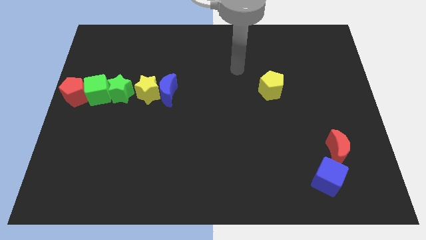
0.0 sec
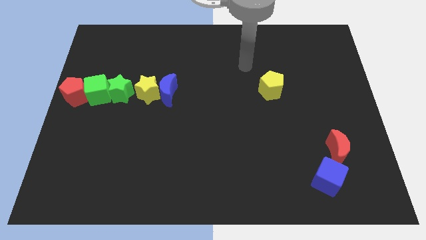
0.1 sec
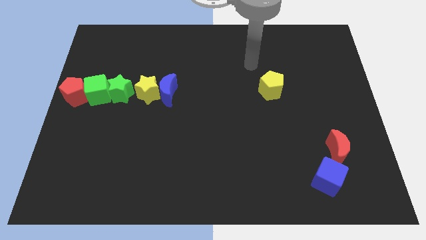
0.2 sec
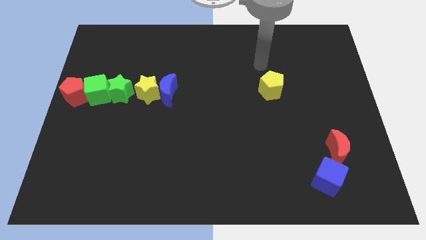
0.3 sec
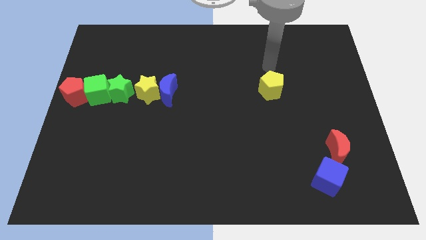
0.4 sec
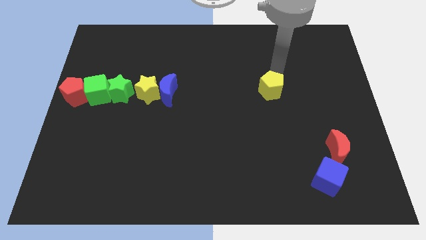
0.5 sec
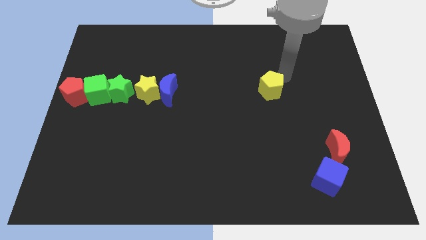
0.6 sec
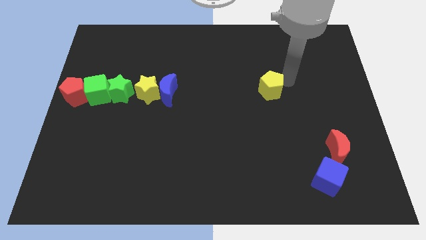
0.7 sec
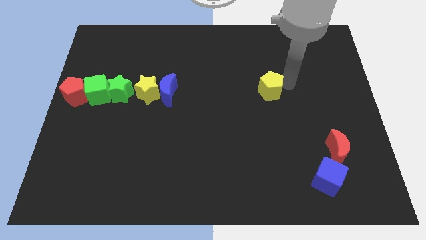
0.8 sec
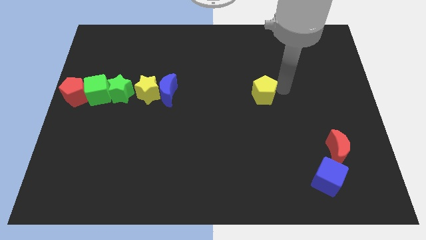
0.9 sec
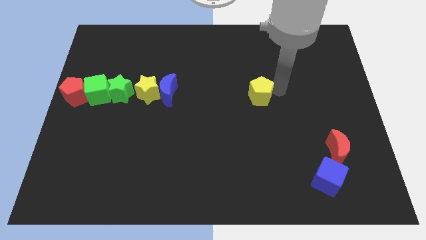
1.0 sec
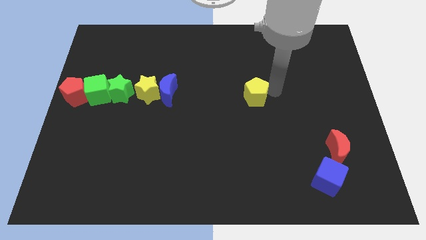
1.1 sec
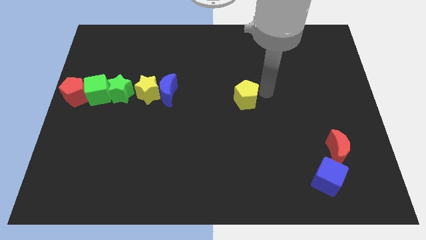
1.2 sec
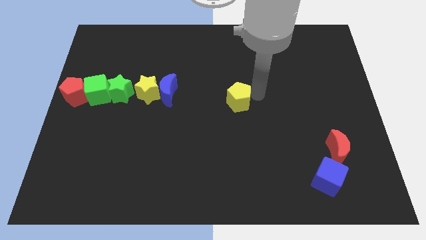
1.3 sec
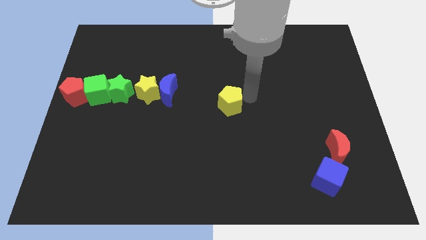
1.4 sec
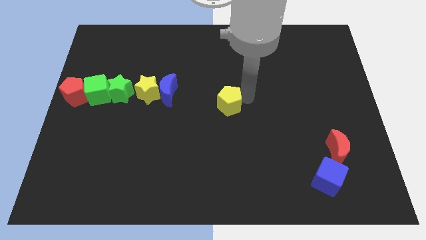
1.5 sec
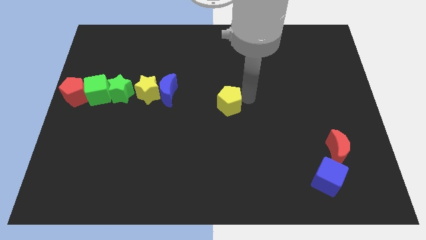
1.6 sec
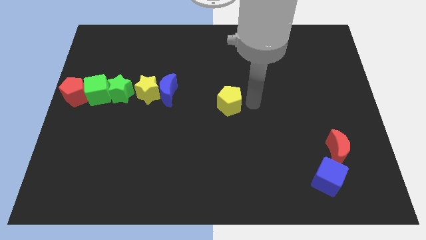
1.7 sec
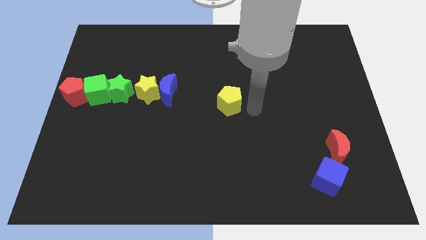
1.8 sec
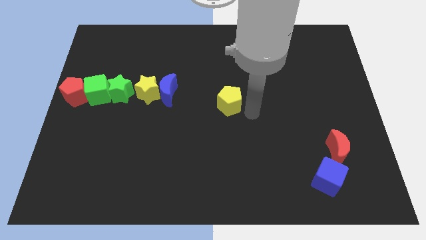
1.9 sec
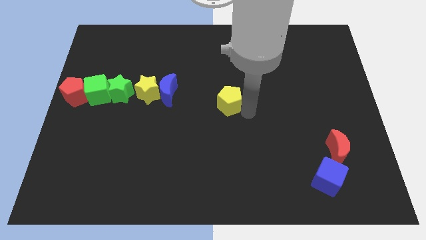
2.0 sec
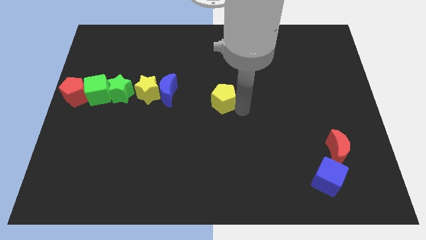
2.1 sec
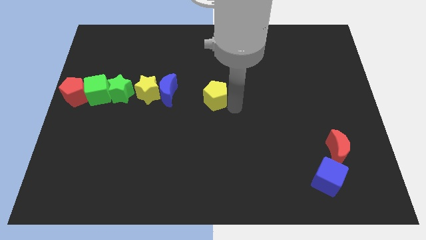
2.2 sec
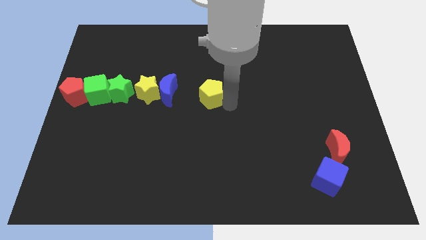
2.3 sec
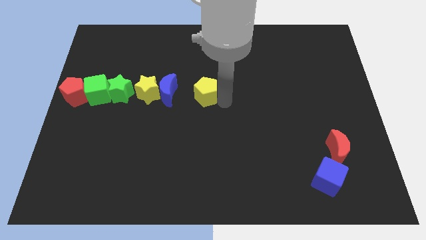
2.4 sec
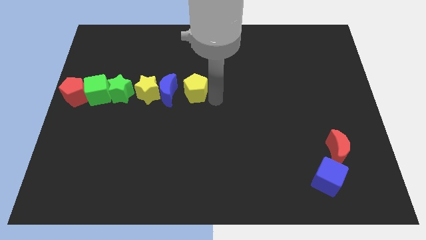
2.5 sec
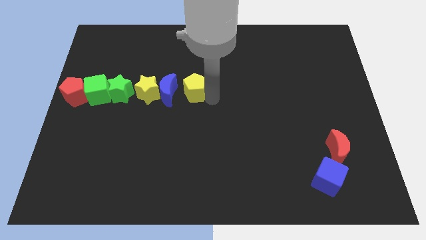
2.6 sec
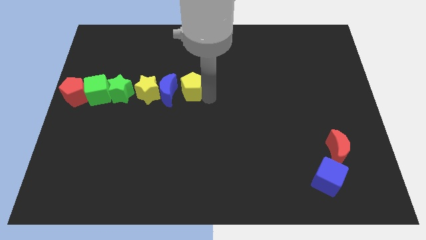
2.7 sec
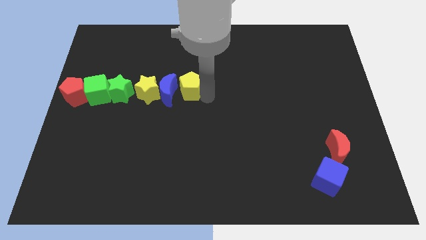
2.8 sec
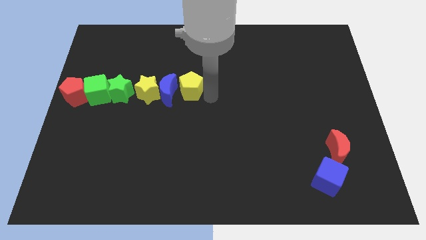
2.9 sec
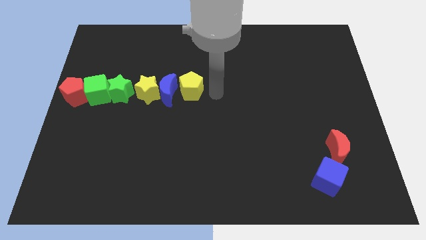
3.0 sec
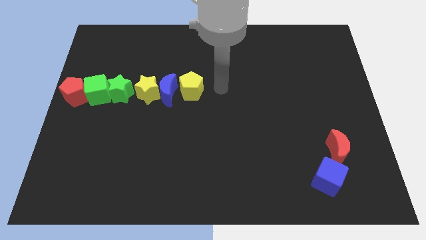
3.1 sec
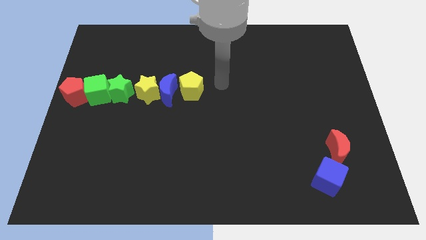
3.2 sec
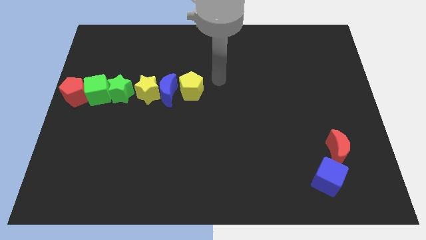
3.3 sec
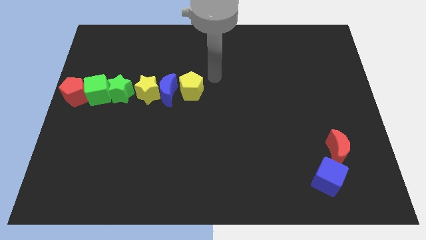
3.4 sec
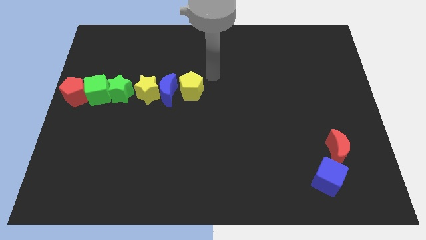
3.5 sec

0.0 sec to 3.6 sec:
move the yellow pentagon to the right side of the blue crescent

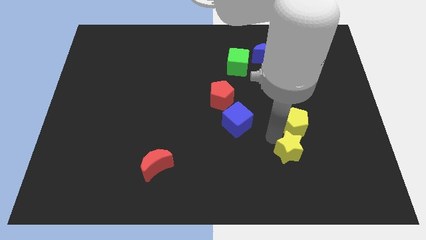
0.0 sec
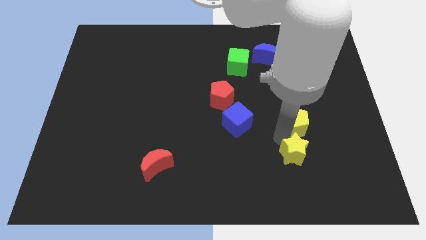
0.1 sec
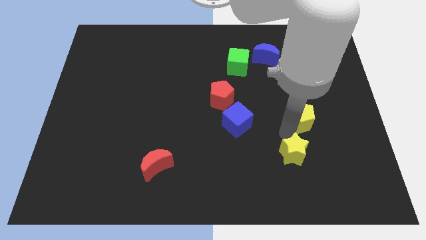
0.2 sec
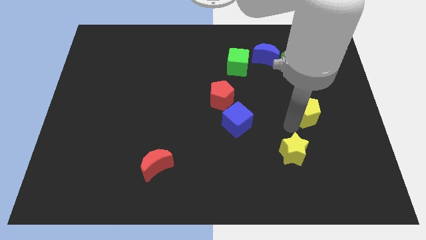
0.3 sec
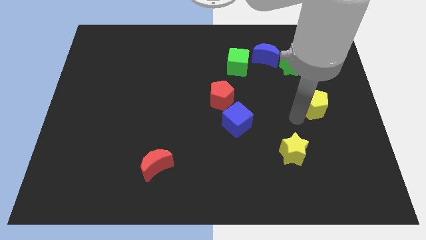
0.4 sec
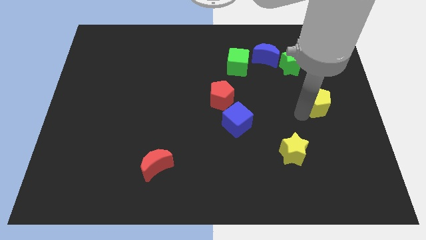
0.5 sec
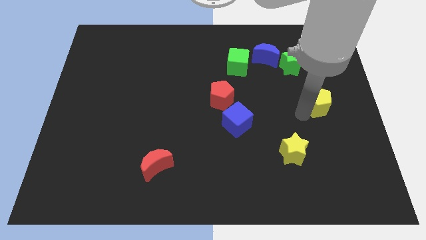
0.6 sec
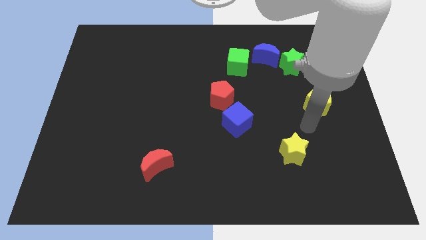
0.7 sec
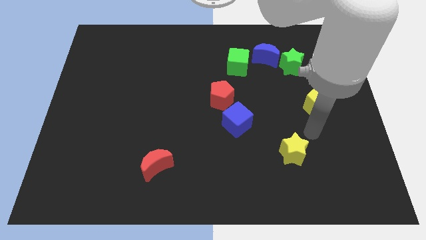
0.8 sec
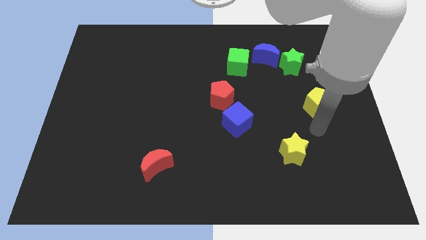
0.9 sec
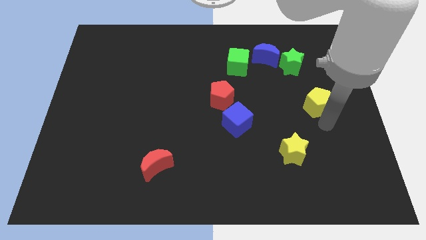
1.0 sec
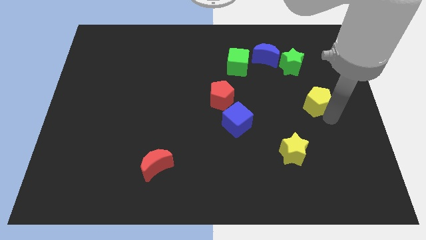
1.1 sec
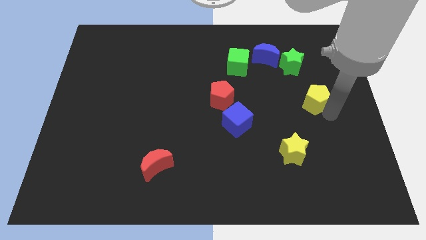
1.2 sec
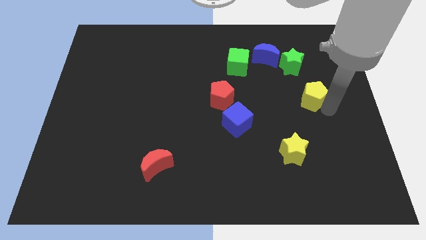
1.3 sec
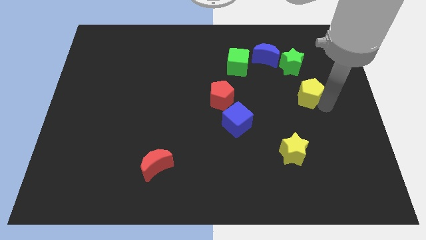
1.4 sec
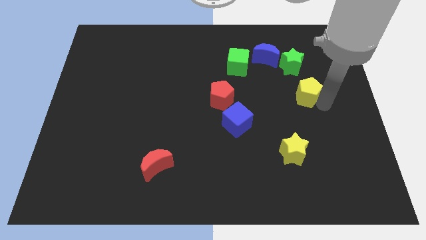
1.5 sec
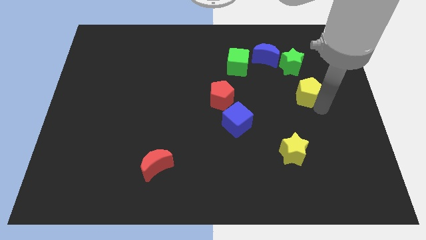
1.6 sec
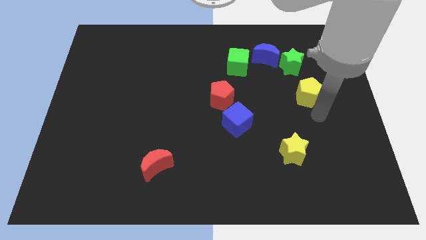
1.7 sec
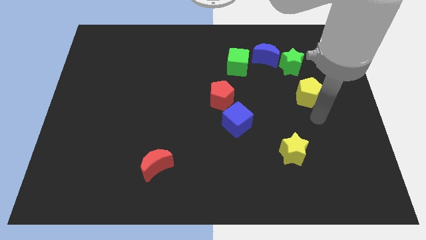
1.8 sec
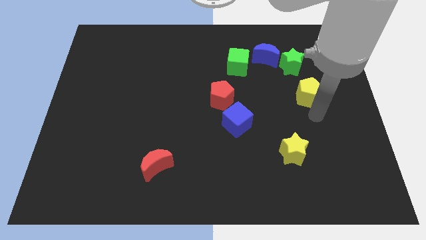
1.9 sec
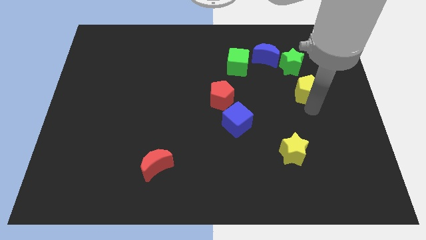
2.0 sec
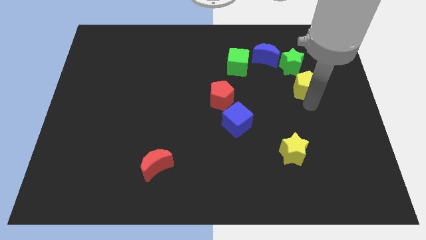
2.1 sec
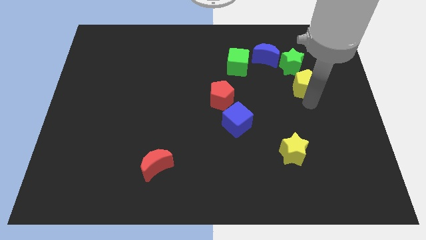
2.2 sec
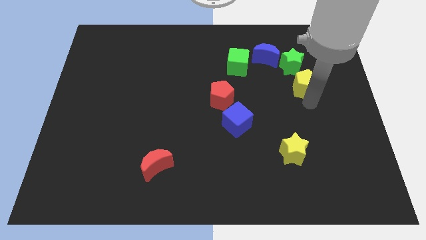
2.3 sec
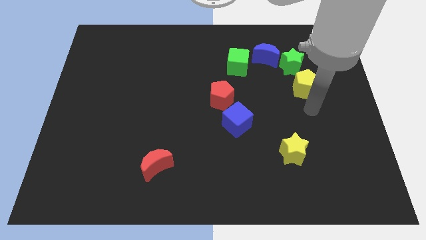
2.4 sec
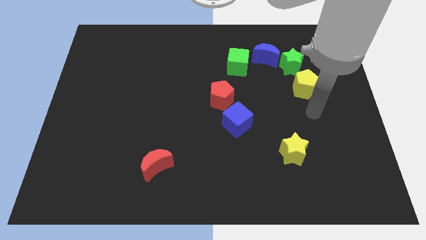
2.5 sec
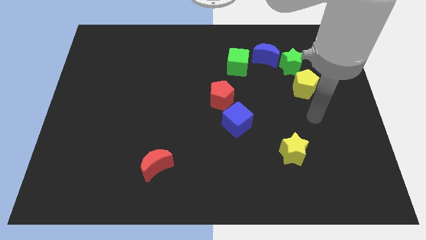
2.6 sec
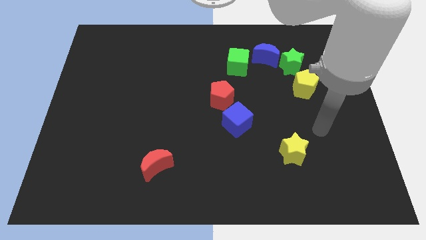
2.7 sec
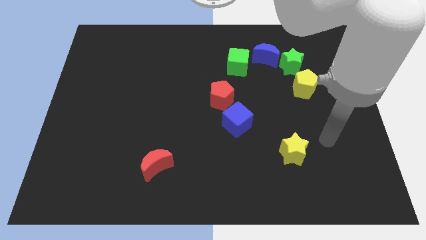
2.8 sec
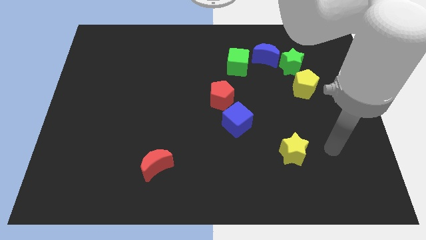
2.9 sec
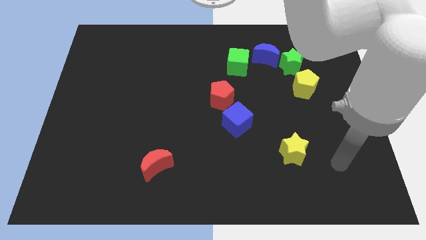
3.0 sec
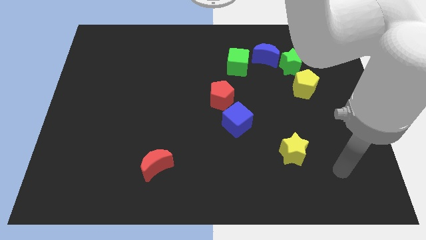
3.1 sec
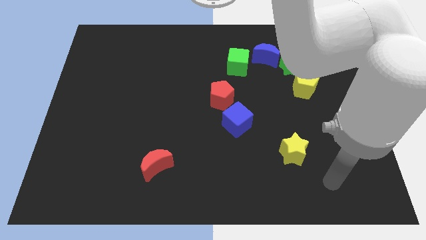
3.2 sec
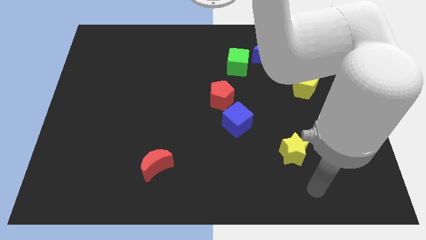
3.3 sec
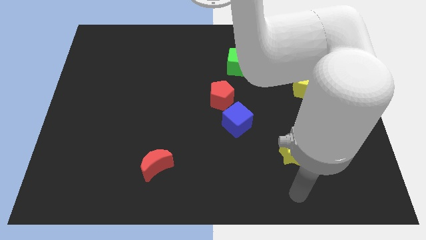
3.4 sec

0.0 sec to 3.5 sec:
drag yellow pentagon close to green star

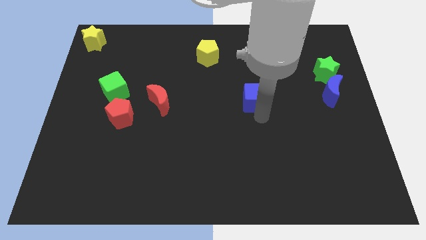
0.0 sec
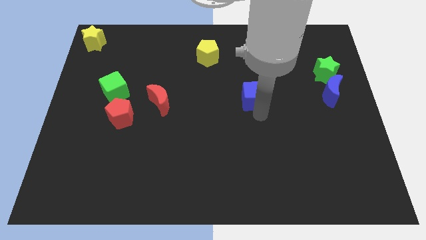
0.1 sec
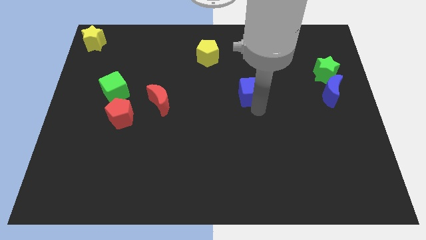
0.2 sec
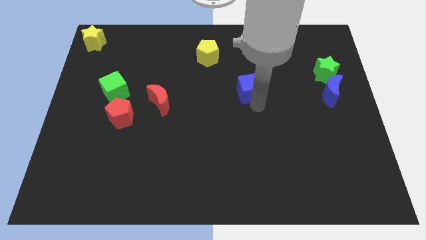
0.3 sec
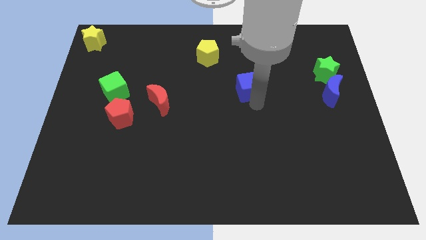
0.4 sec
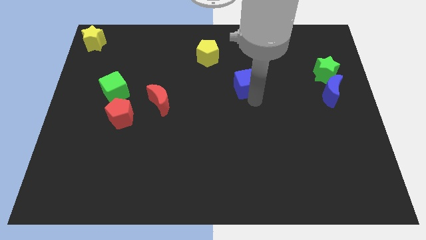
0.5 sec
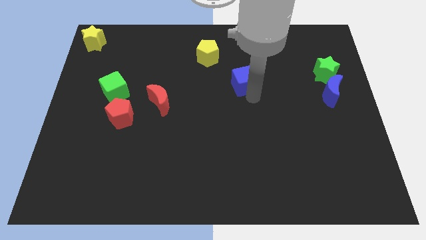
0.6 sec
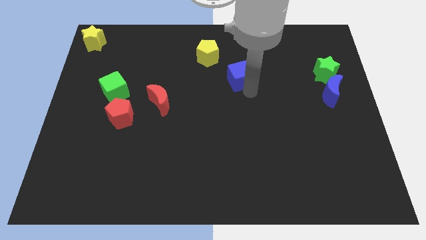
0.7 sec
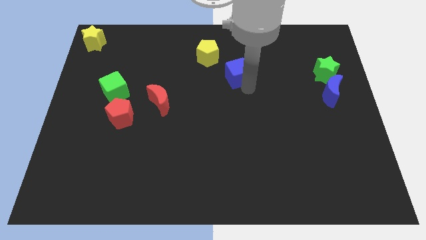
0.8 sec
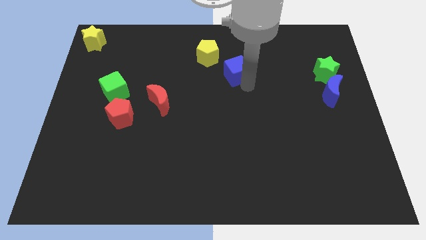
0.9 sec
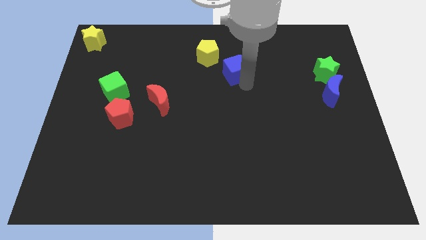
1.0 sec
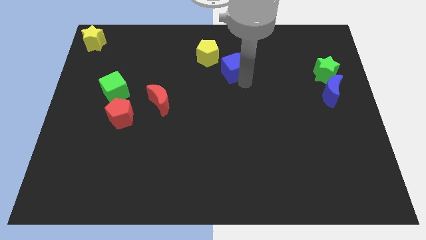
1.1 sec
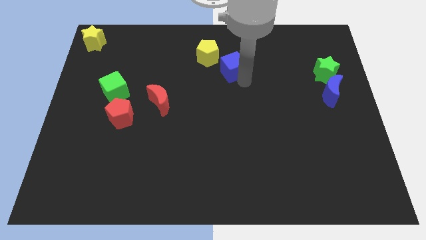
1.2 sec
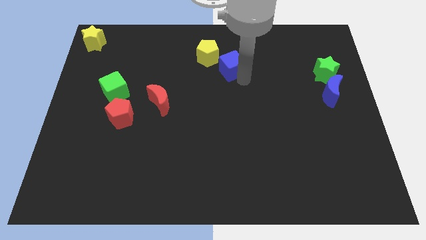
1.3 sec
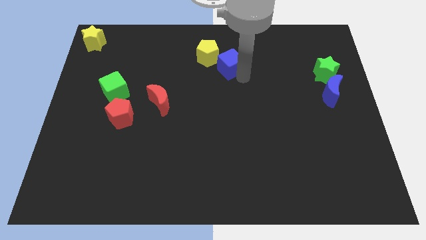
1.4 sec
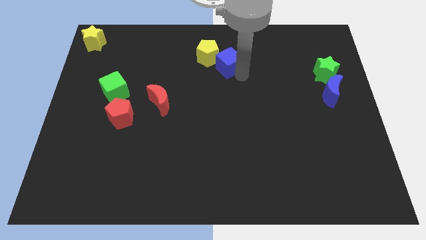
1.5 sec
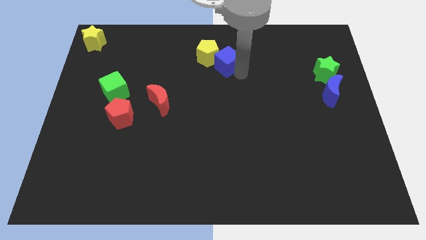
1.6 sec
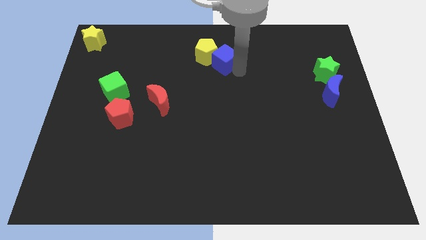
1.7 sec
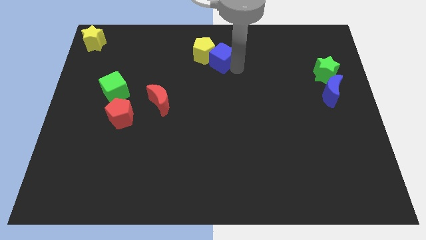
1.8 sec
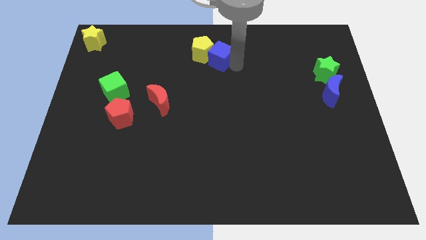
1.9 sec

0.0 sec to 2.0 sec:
push the blue cube into the yellow pentagon
